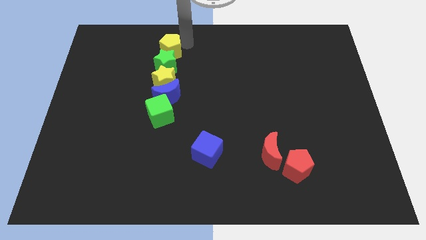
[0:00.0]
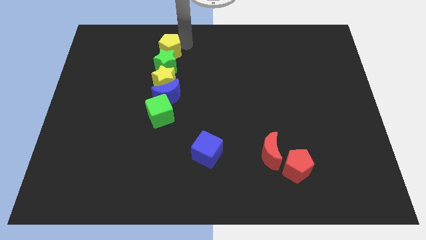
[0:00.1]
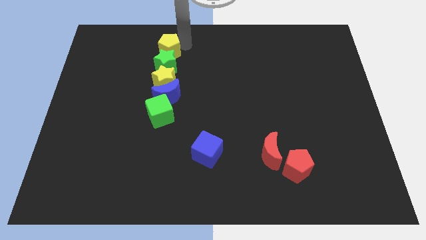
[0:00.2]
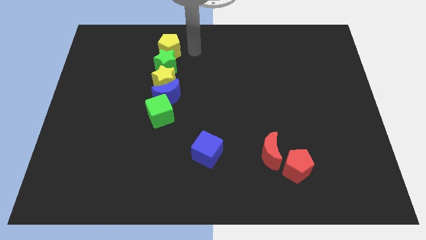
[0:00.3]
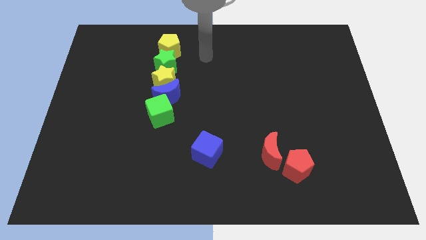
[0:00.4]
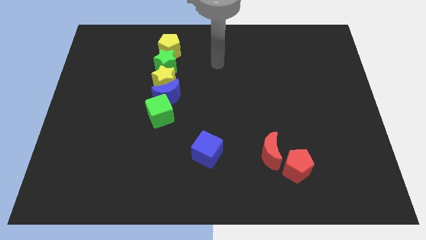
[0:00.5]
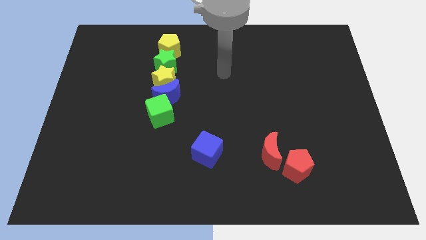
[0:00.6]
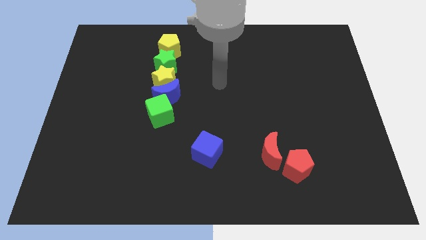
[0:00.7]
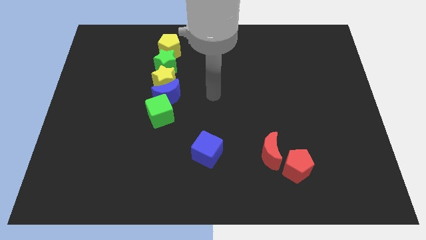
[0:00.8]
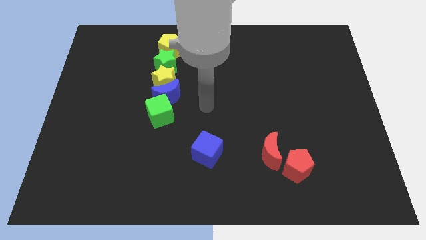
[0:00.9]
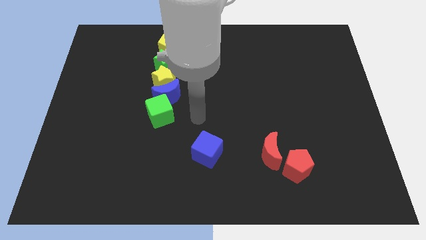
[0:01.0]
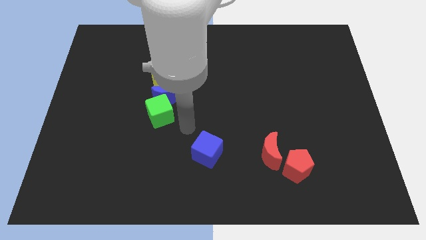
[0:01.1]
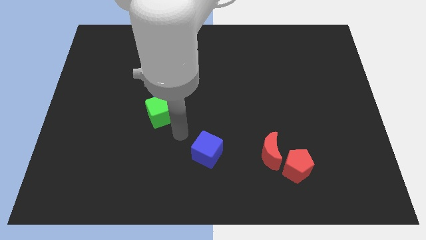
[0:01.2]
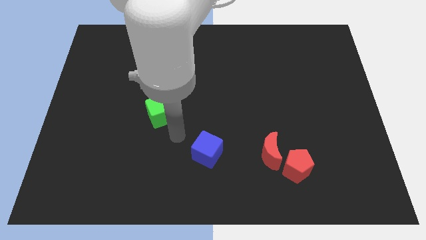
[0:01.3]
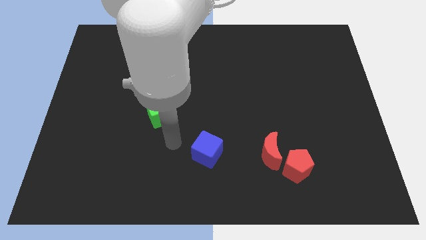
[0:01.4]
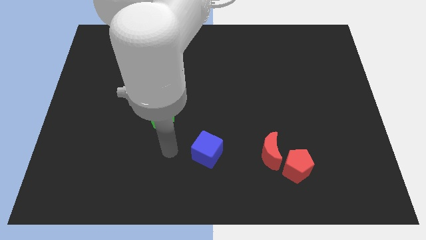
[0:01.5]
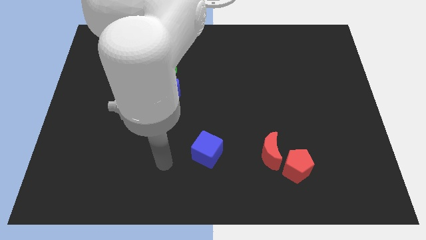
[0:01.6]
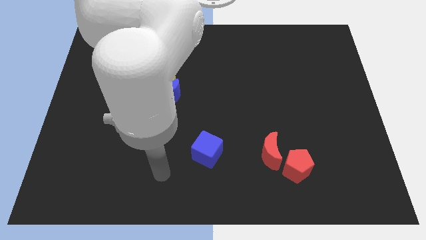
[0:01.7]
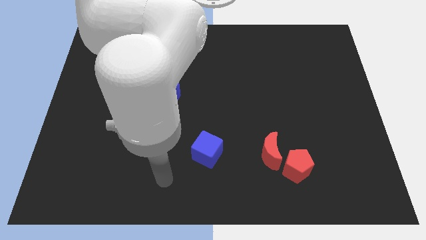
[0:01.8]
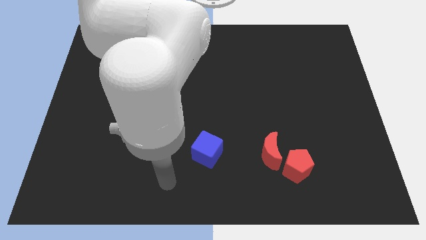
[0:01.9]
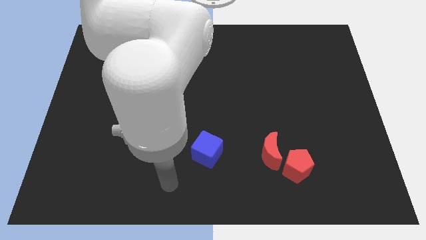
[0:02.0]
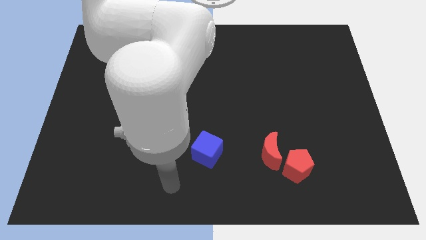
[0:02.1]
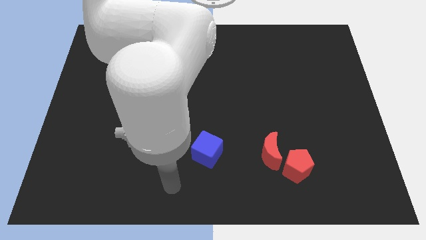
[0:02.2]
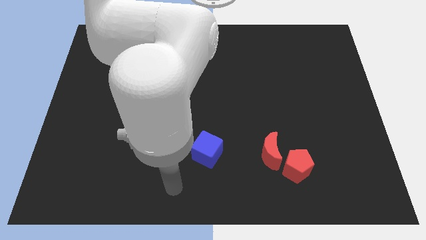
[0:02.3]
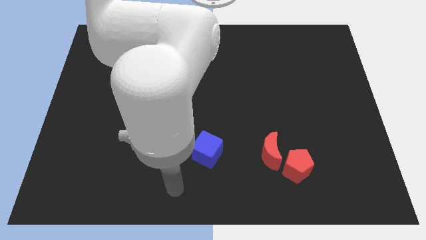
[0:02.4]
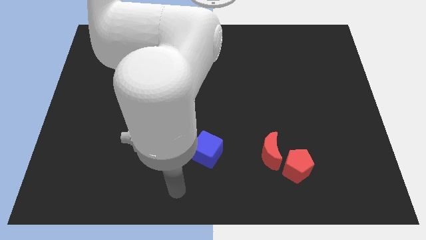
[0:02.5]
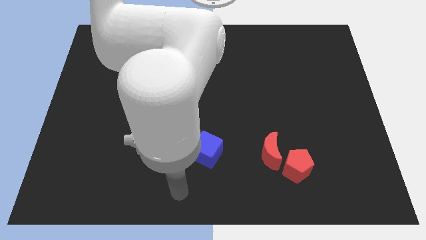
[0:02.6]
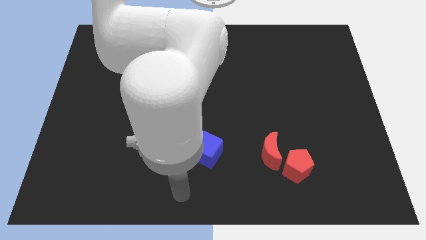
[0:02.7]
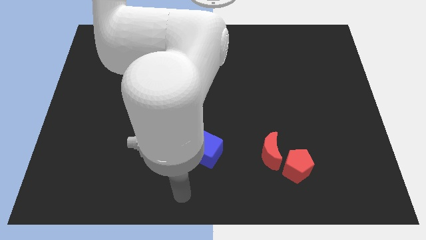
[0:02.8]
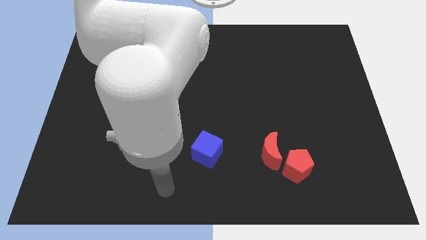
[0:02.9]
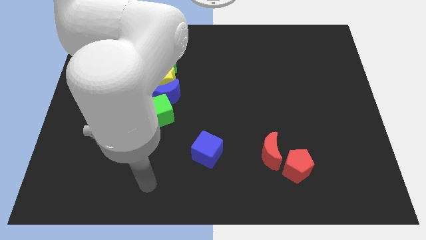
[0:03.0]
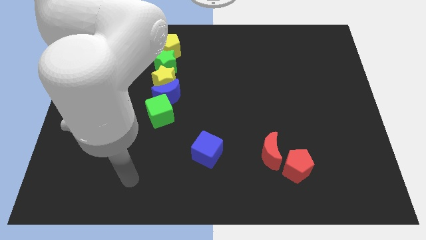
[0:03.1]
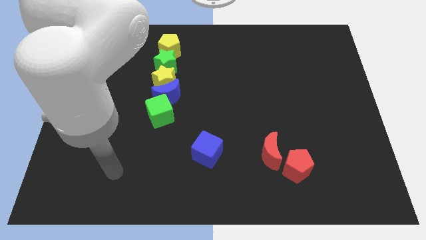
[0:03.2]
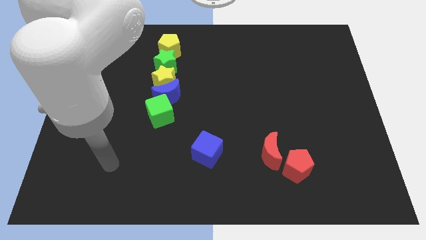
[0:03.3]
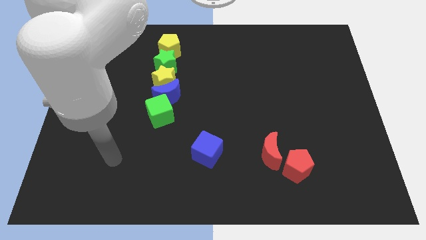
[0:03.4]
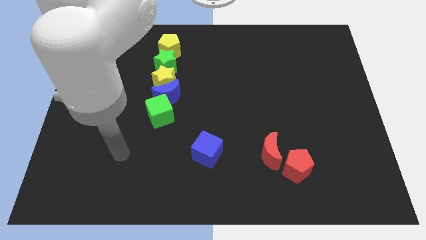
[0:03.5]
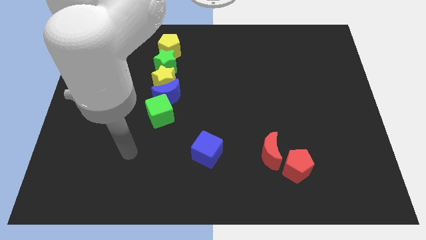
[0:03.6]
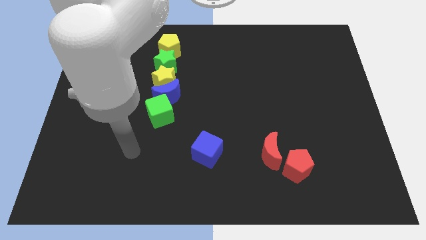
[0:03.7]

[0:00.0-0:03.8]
move your arm away from the yellow pentagon

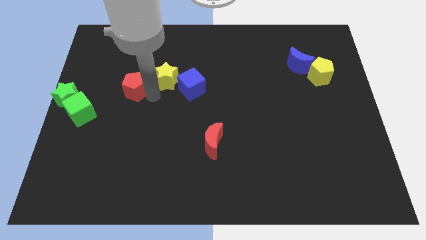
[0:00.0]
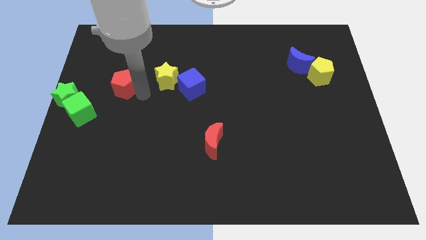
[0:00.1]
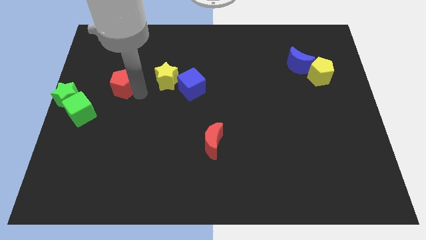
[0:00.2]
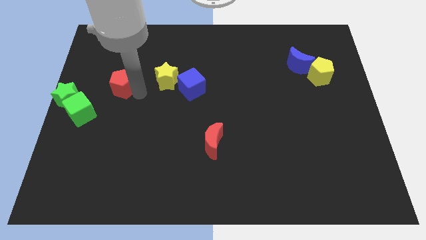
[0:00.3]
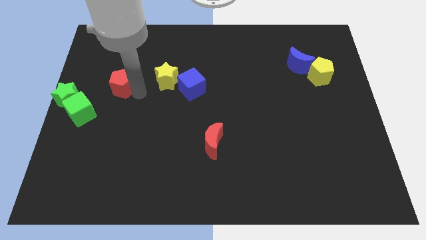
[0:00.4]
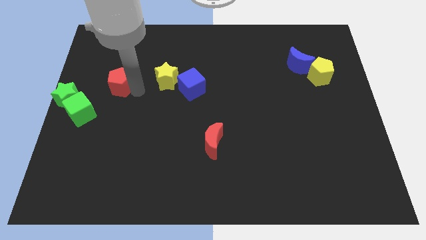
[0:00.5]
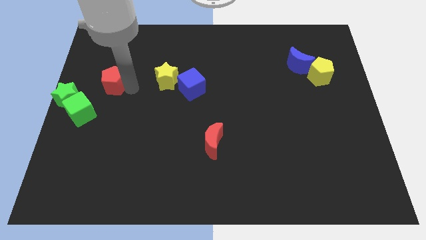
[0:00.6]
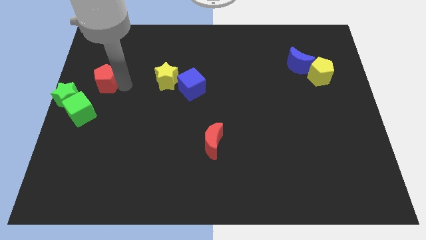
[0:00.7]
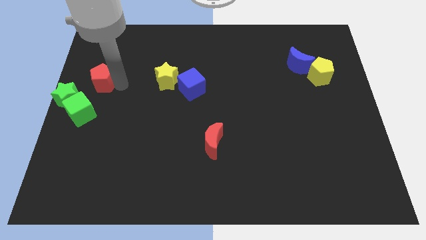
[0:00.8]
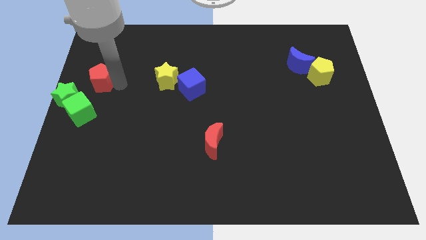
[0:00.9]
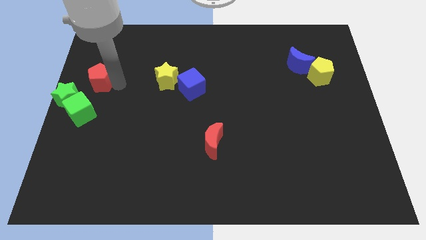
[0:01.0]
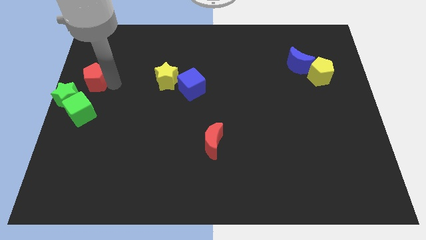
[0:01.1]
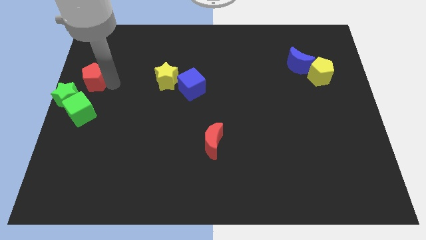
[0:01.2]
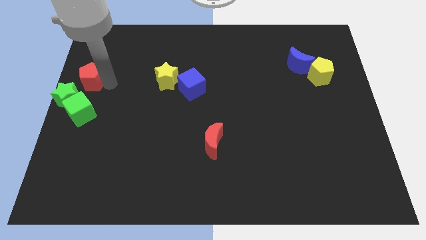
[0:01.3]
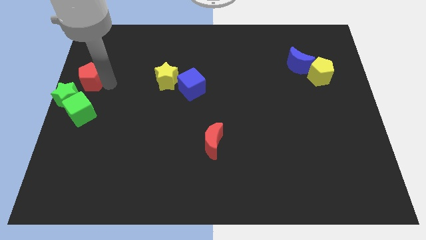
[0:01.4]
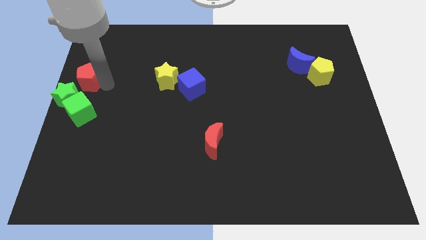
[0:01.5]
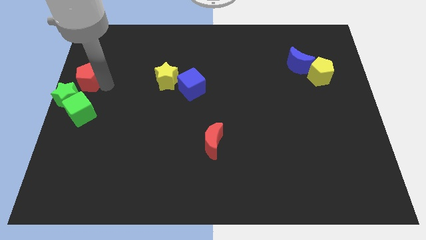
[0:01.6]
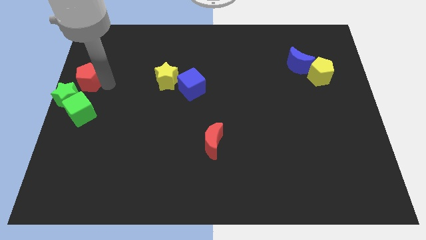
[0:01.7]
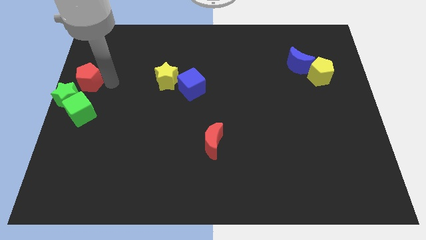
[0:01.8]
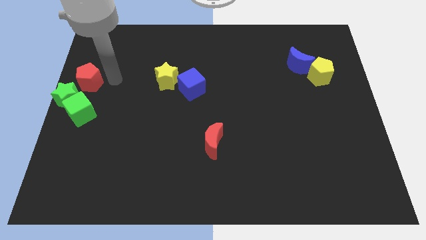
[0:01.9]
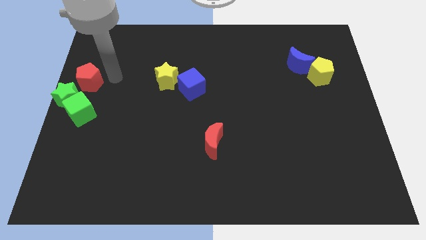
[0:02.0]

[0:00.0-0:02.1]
move red pentagon above the green cube

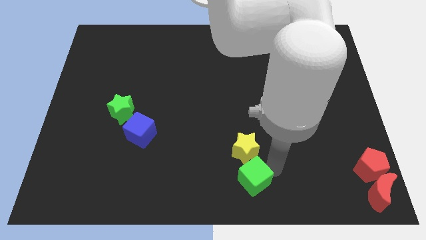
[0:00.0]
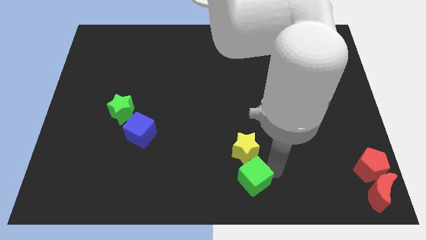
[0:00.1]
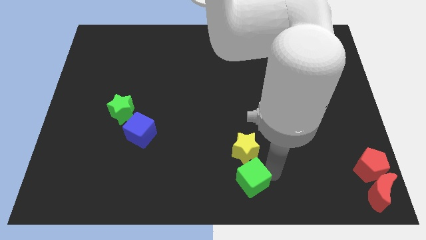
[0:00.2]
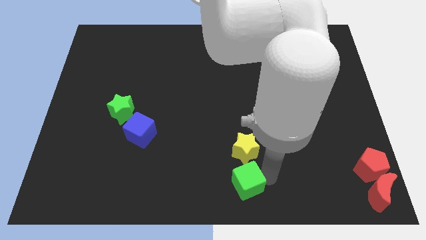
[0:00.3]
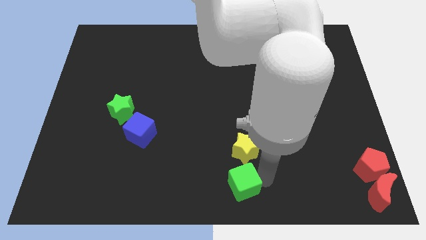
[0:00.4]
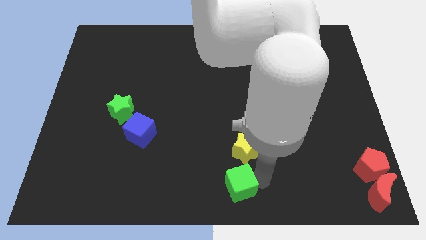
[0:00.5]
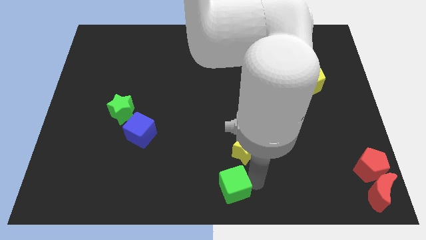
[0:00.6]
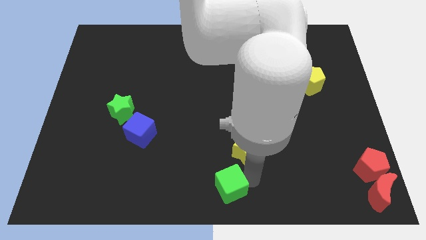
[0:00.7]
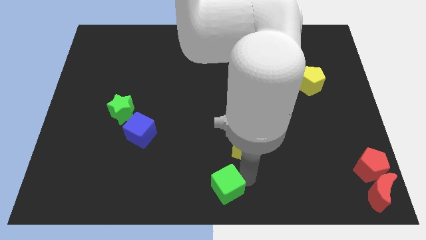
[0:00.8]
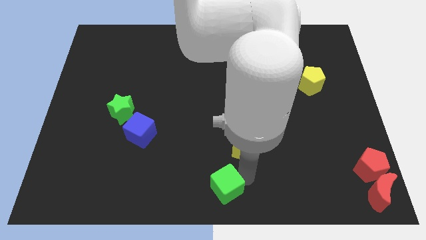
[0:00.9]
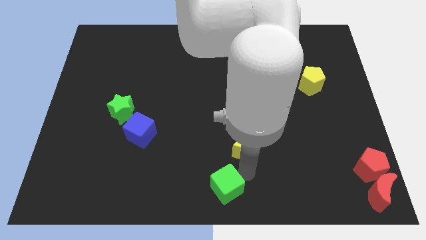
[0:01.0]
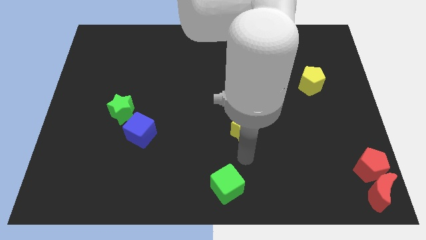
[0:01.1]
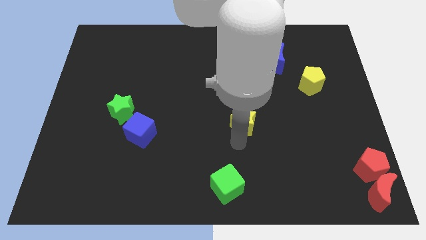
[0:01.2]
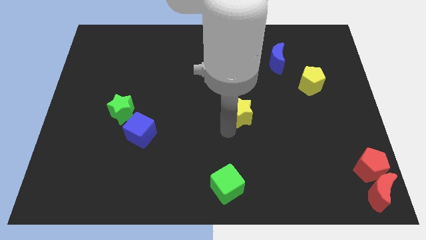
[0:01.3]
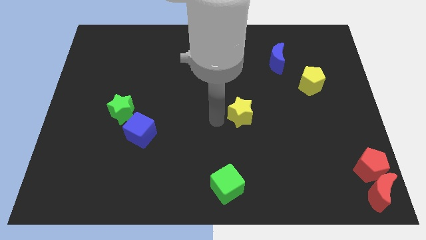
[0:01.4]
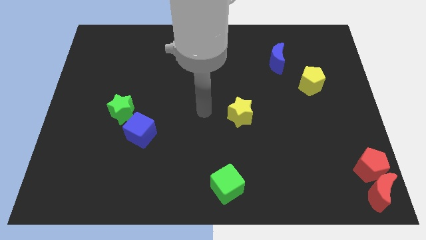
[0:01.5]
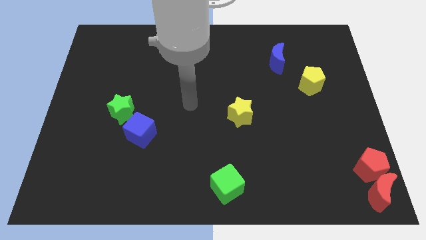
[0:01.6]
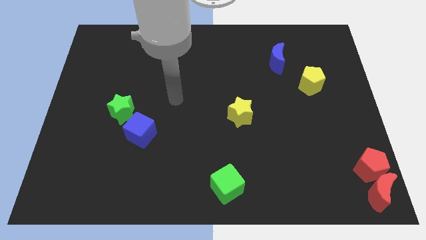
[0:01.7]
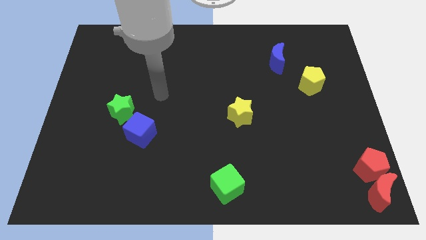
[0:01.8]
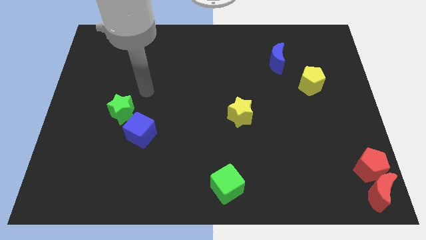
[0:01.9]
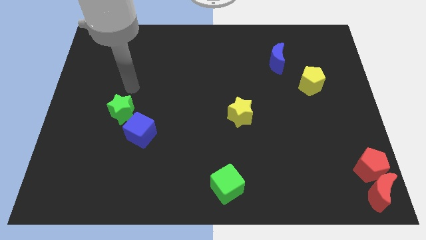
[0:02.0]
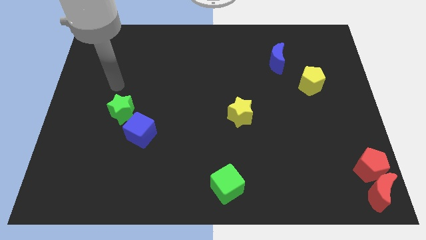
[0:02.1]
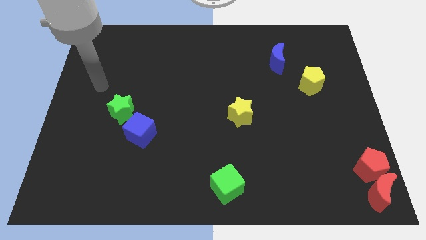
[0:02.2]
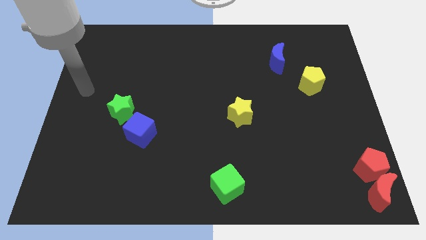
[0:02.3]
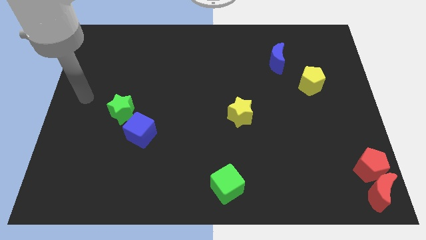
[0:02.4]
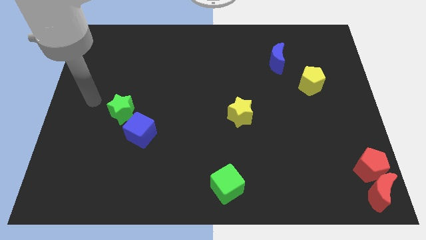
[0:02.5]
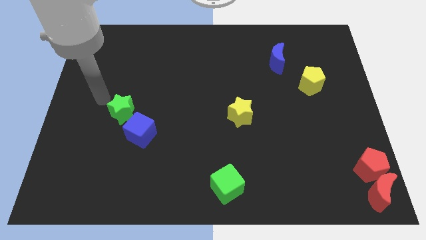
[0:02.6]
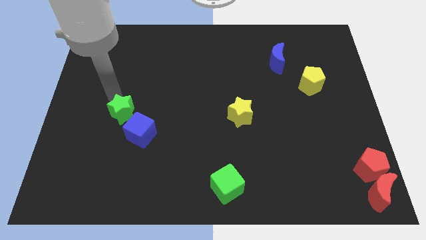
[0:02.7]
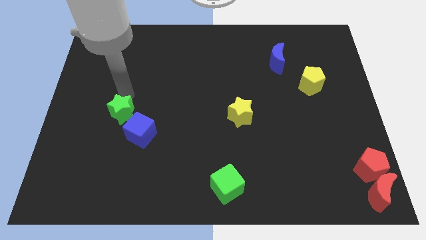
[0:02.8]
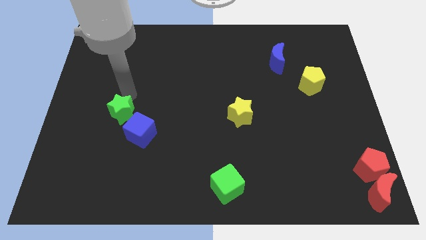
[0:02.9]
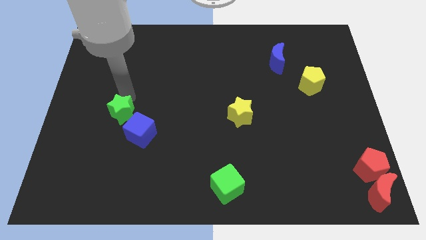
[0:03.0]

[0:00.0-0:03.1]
separate the yellow star away from green cube
